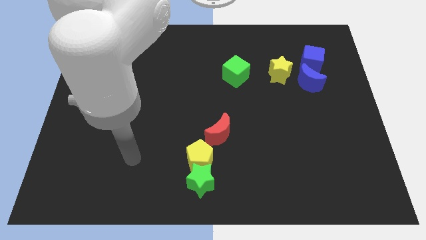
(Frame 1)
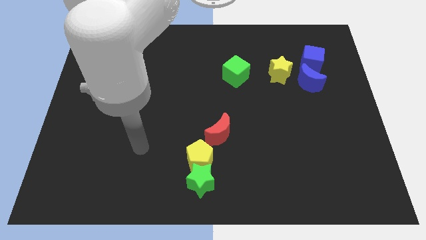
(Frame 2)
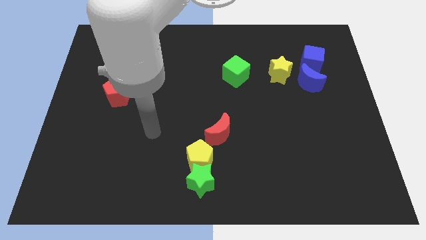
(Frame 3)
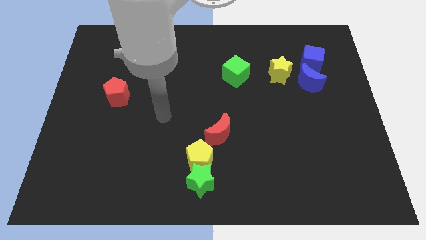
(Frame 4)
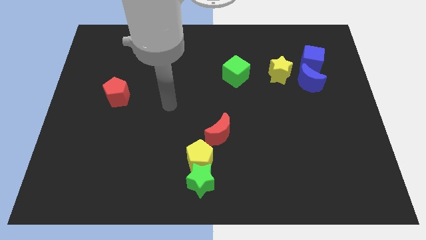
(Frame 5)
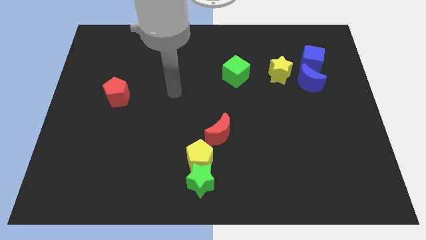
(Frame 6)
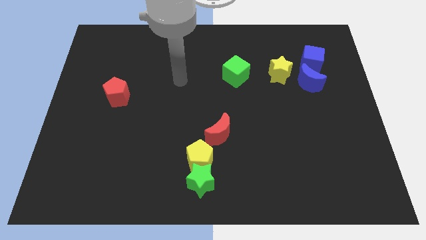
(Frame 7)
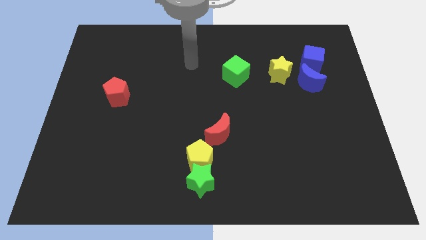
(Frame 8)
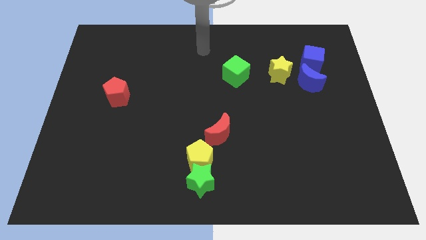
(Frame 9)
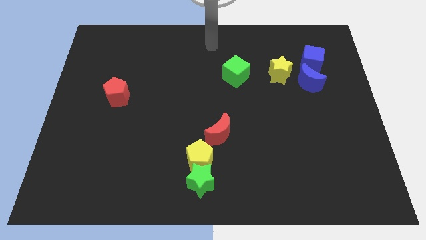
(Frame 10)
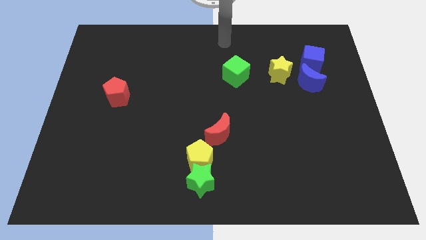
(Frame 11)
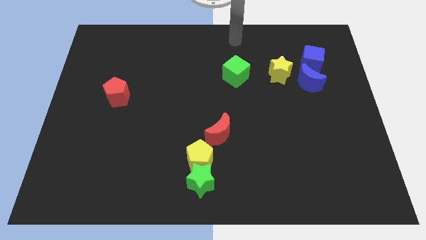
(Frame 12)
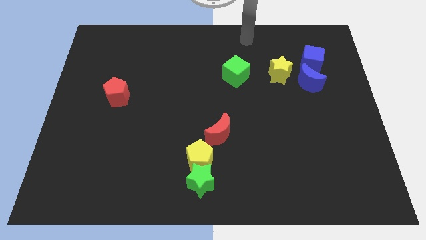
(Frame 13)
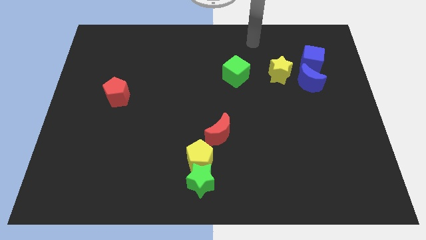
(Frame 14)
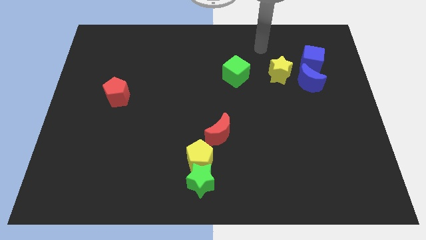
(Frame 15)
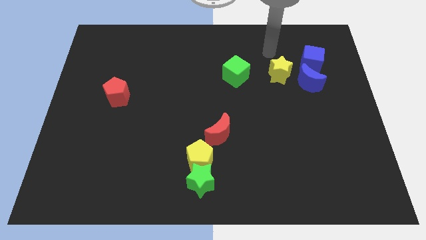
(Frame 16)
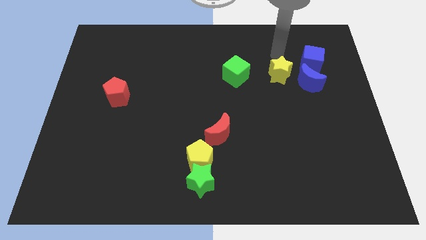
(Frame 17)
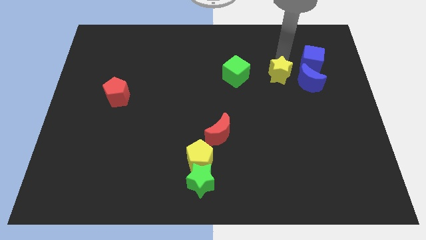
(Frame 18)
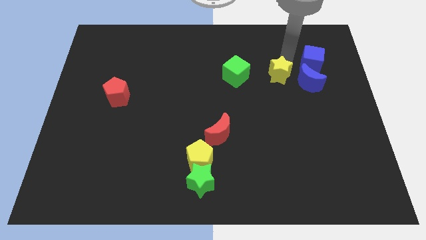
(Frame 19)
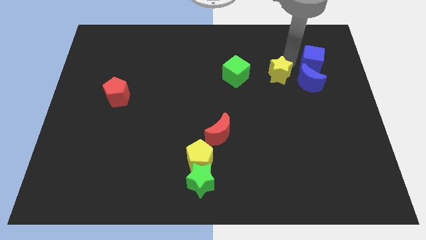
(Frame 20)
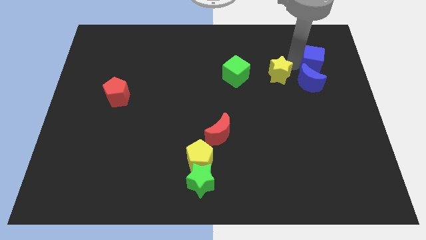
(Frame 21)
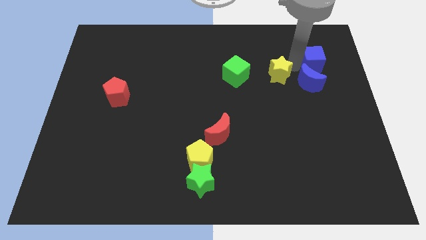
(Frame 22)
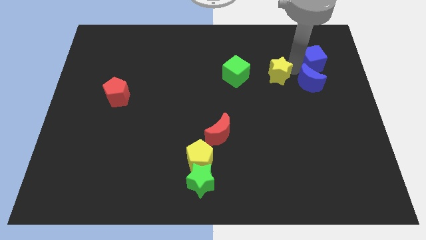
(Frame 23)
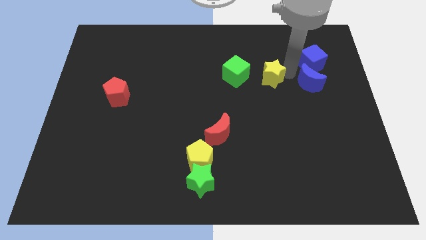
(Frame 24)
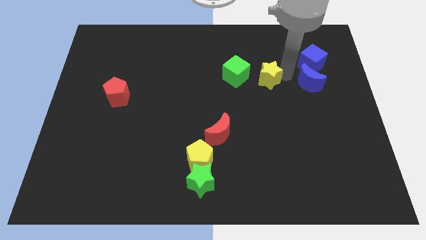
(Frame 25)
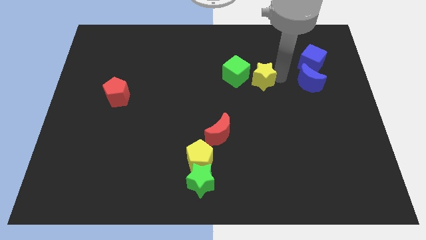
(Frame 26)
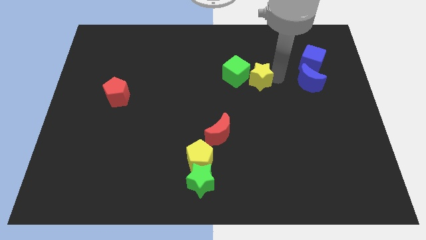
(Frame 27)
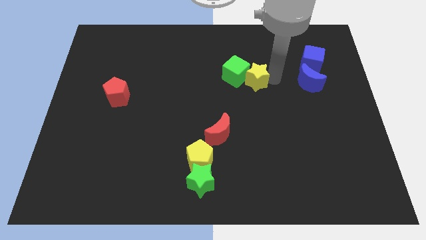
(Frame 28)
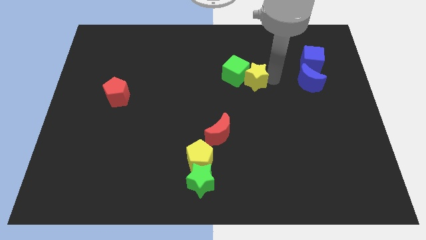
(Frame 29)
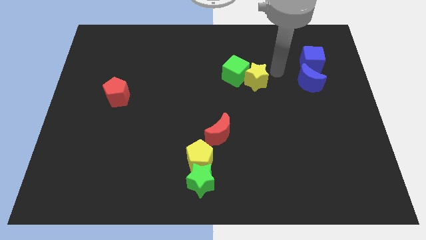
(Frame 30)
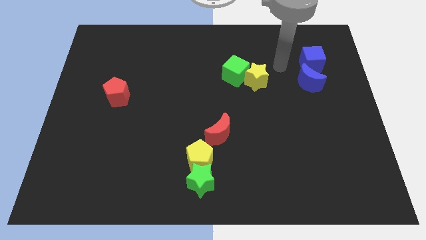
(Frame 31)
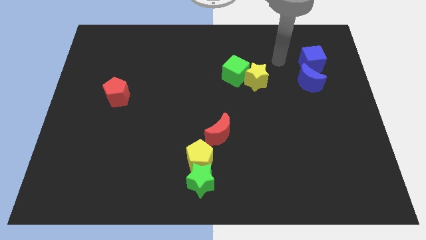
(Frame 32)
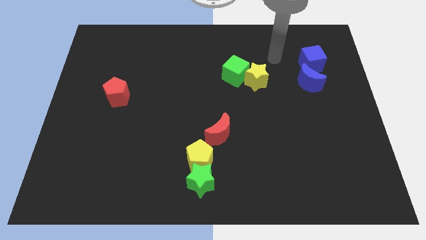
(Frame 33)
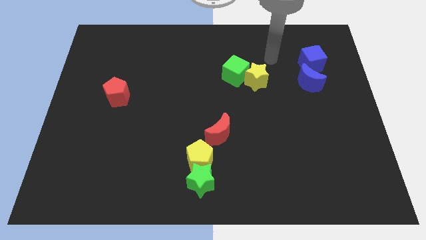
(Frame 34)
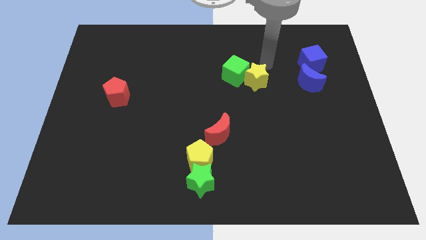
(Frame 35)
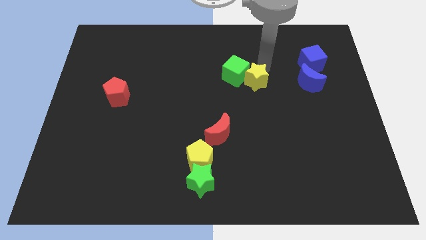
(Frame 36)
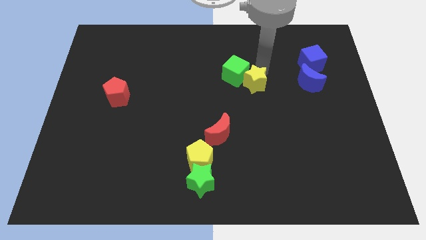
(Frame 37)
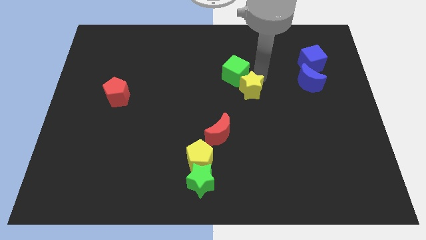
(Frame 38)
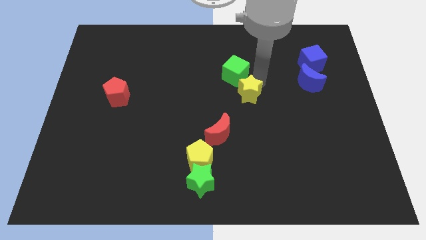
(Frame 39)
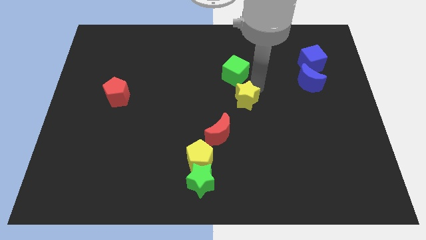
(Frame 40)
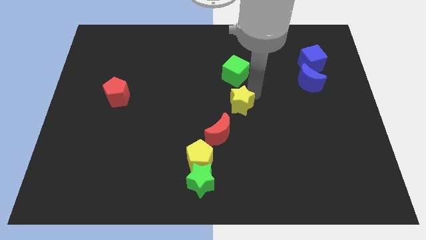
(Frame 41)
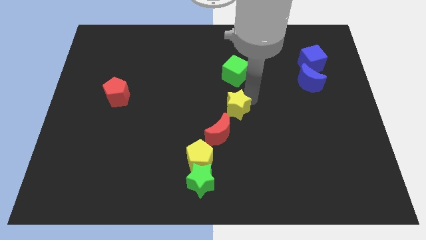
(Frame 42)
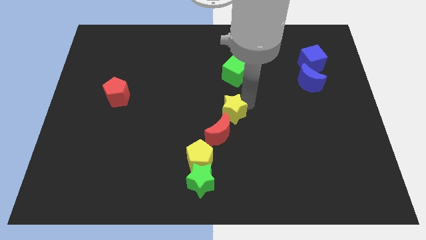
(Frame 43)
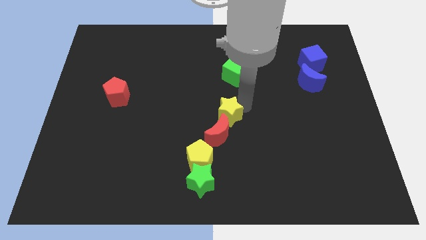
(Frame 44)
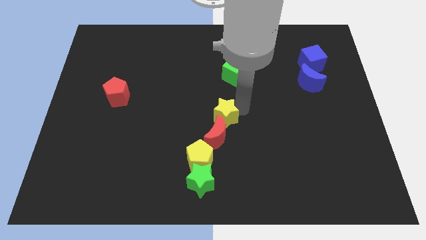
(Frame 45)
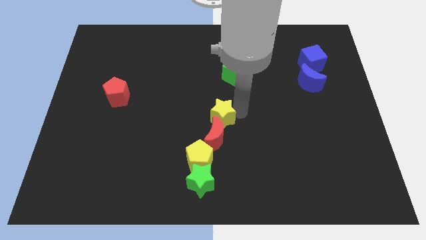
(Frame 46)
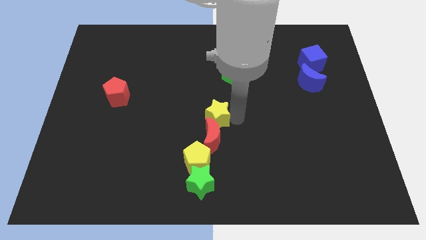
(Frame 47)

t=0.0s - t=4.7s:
move the yellow star next to the red moon

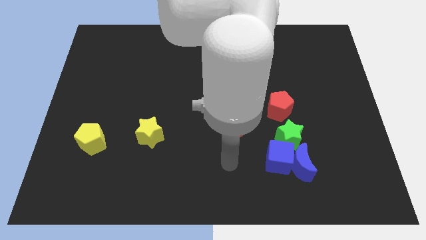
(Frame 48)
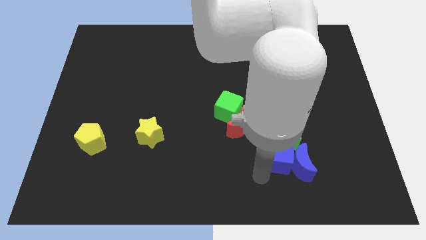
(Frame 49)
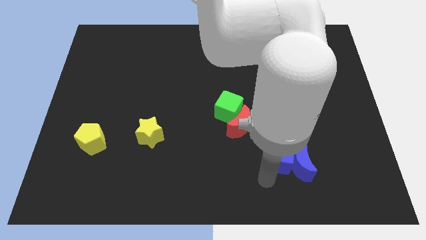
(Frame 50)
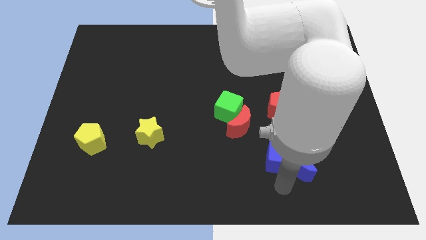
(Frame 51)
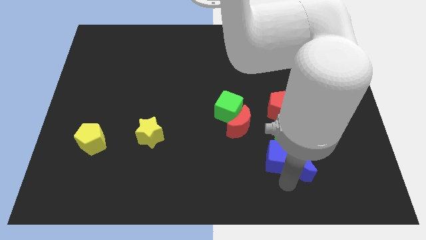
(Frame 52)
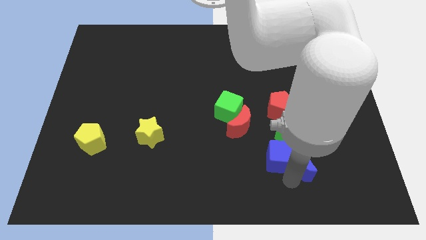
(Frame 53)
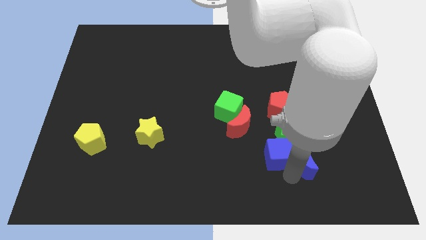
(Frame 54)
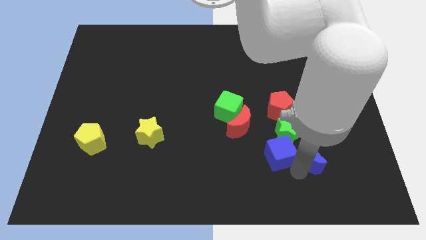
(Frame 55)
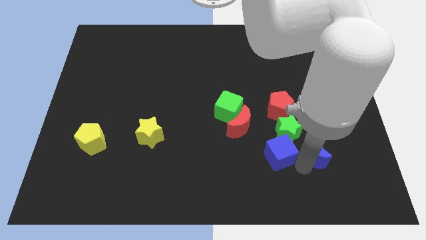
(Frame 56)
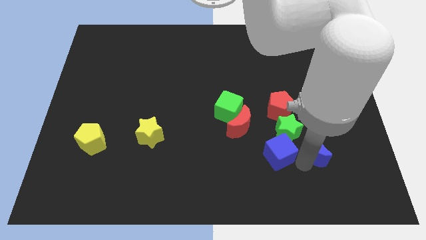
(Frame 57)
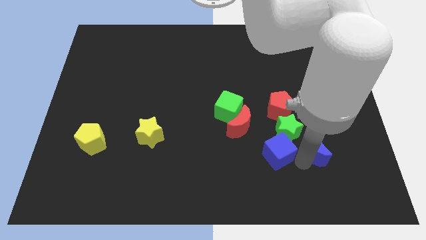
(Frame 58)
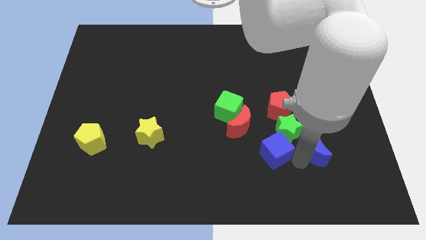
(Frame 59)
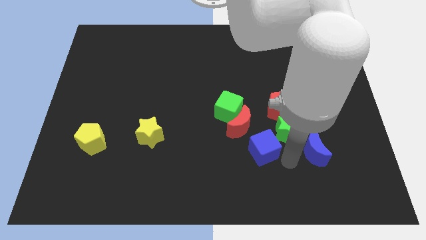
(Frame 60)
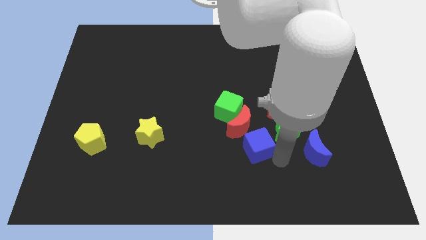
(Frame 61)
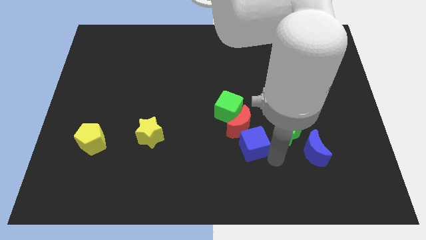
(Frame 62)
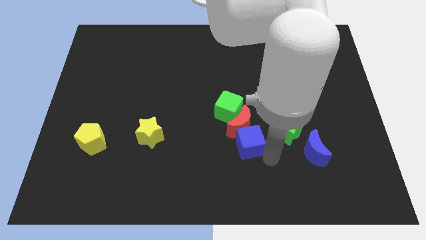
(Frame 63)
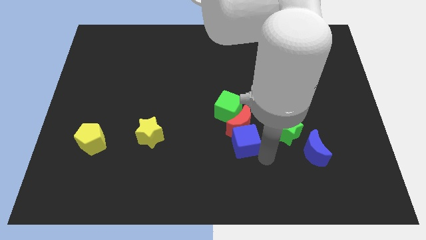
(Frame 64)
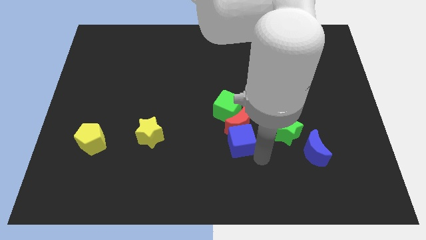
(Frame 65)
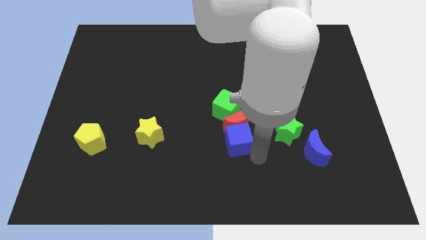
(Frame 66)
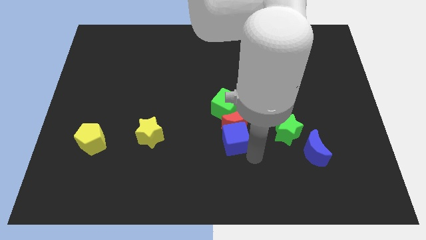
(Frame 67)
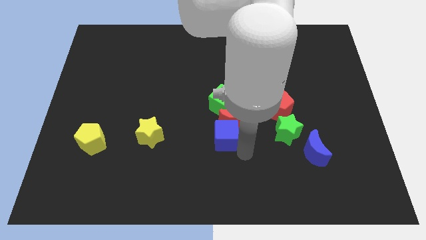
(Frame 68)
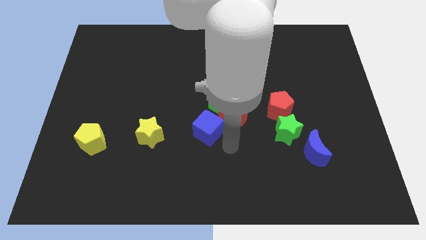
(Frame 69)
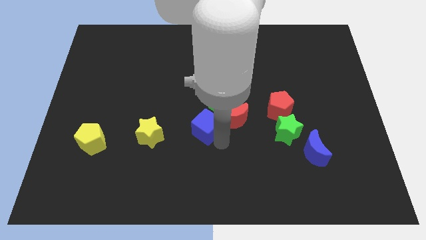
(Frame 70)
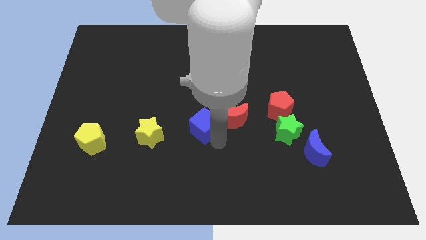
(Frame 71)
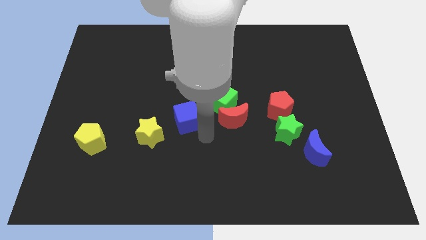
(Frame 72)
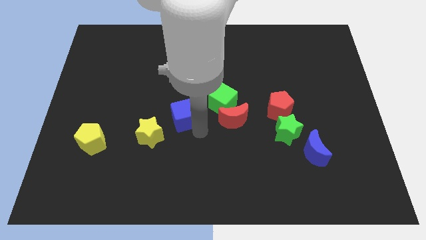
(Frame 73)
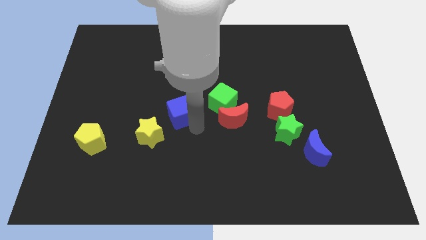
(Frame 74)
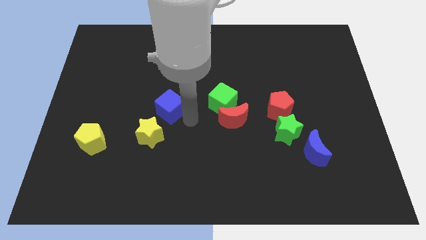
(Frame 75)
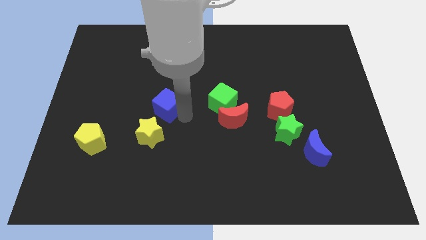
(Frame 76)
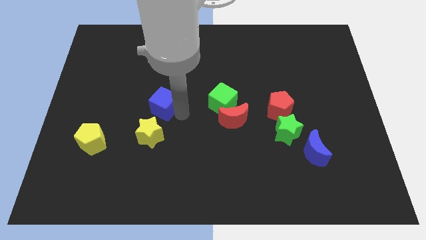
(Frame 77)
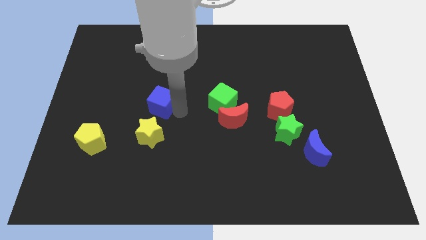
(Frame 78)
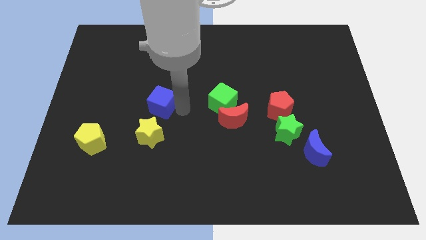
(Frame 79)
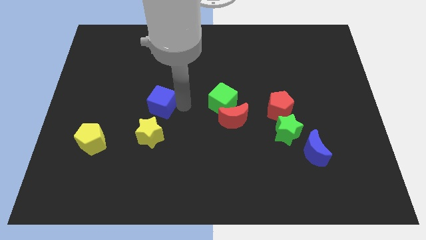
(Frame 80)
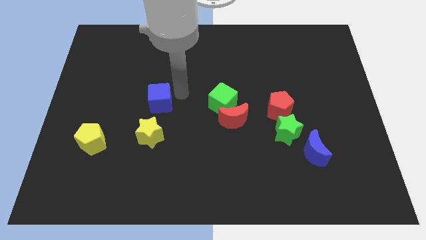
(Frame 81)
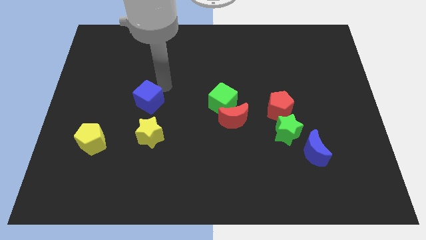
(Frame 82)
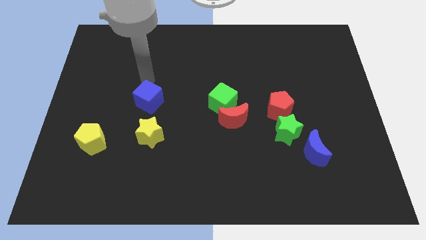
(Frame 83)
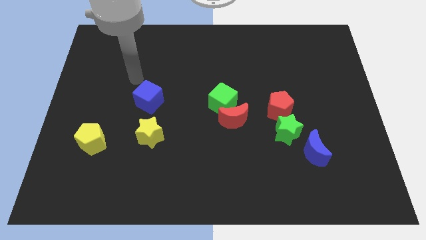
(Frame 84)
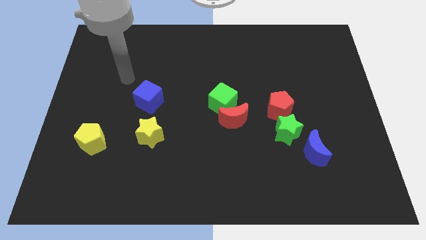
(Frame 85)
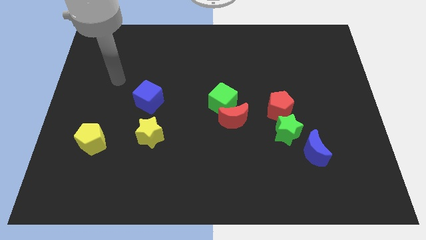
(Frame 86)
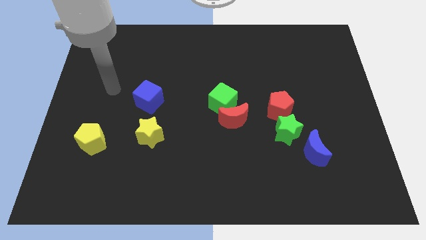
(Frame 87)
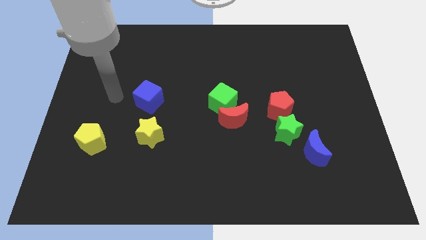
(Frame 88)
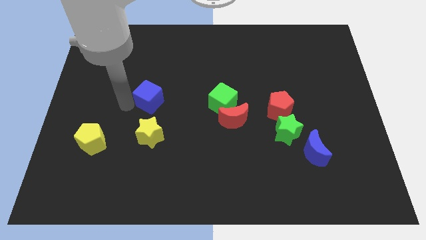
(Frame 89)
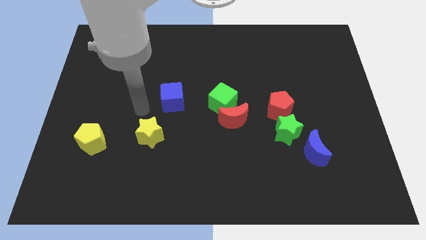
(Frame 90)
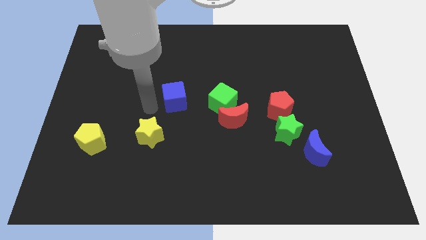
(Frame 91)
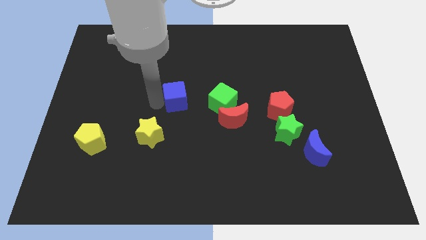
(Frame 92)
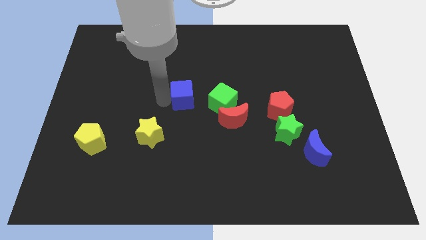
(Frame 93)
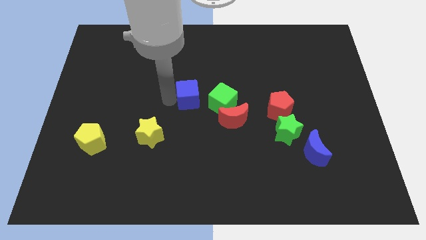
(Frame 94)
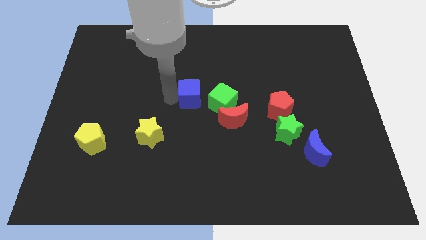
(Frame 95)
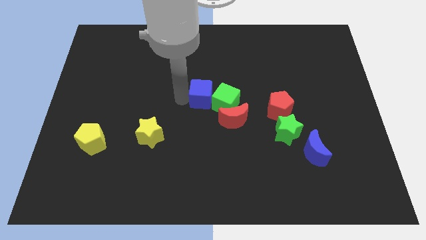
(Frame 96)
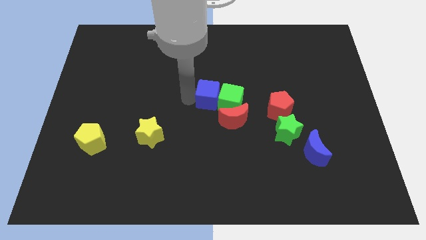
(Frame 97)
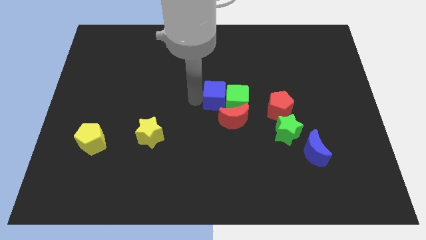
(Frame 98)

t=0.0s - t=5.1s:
slide the blue cube to the green cube
